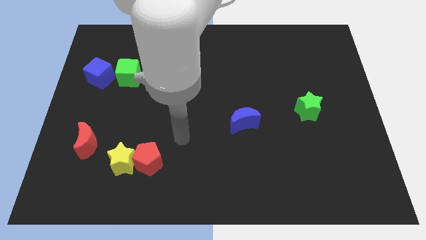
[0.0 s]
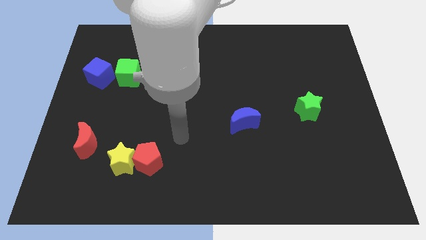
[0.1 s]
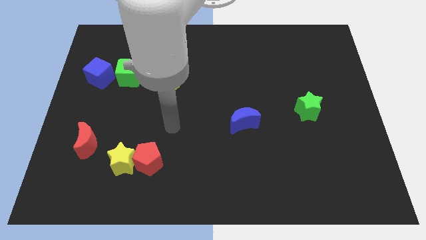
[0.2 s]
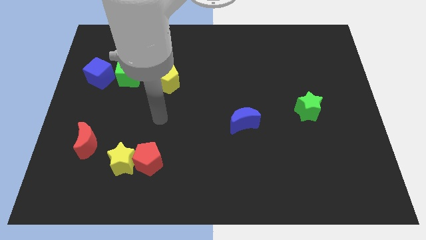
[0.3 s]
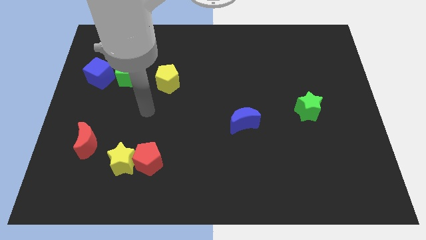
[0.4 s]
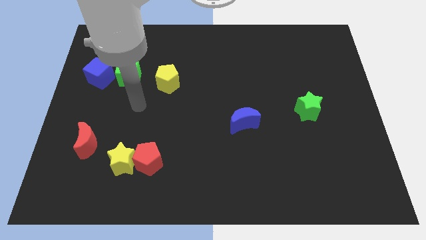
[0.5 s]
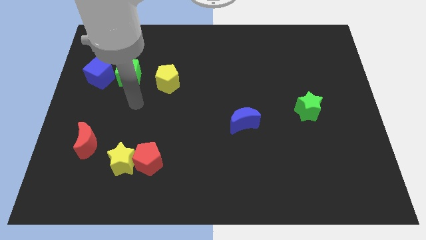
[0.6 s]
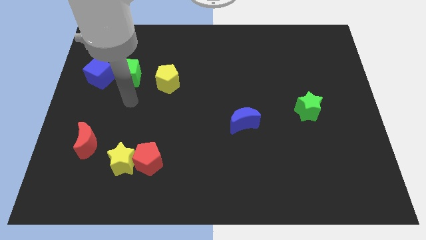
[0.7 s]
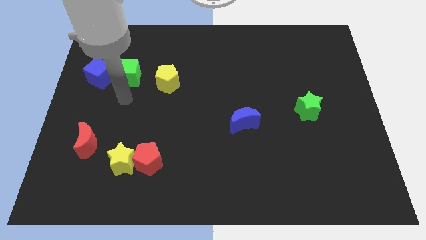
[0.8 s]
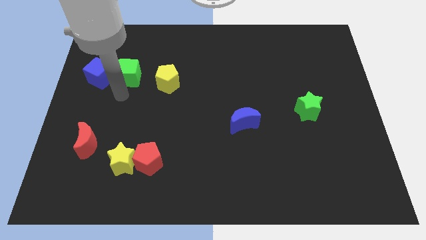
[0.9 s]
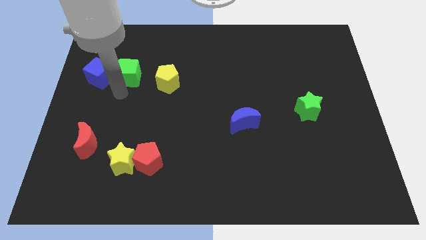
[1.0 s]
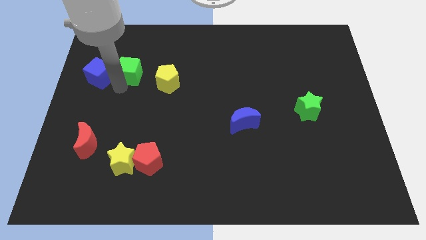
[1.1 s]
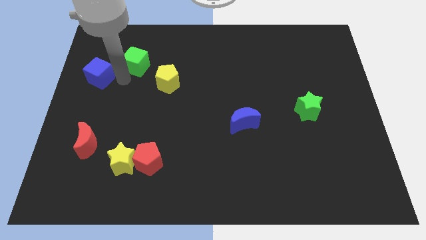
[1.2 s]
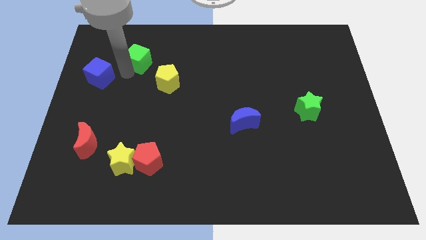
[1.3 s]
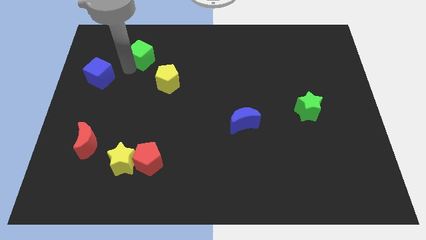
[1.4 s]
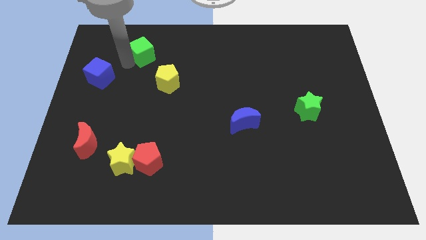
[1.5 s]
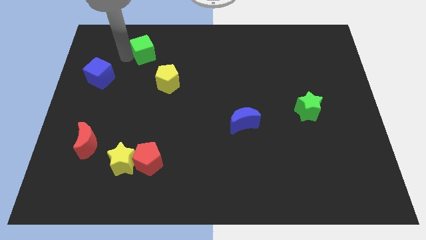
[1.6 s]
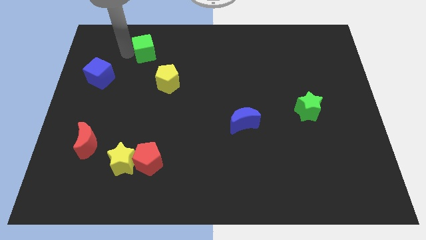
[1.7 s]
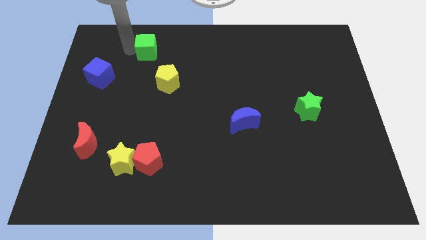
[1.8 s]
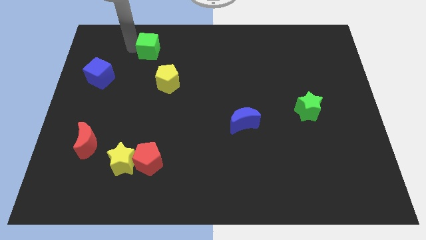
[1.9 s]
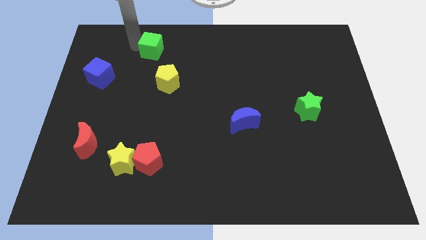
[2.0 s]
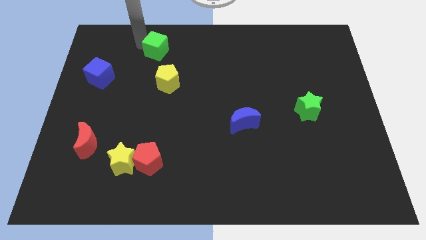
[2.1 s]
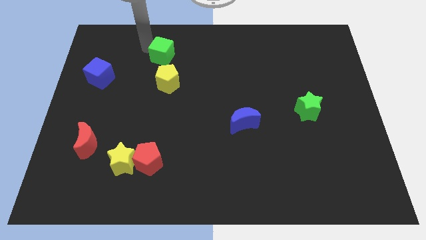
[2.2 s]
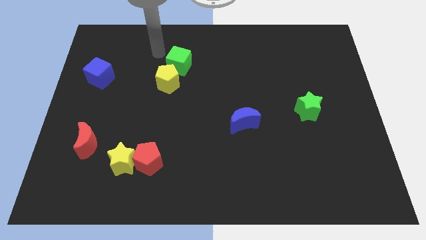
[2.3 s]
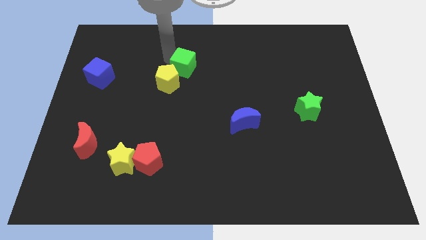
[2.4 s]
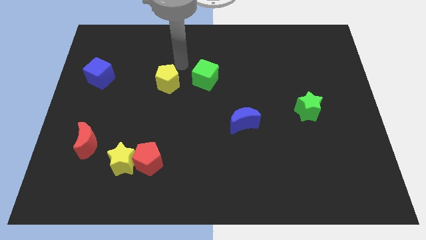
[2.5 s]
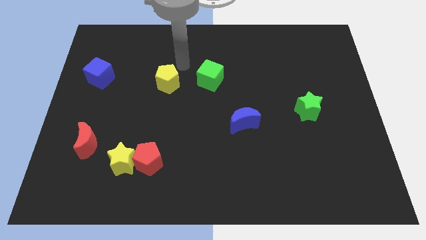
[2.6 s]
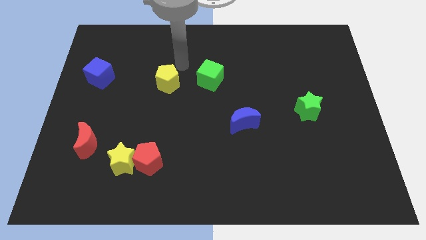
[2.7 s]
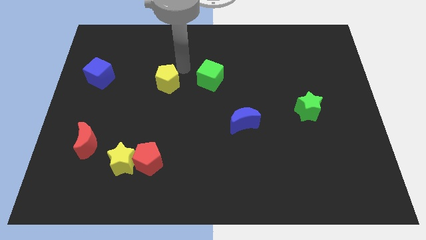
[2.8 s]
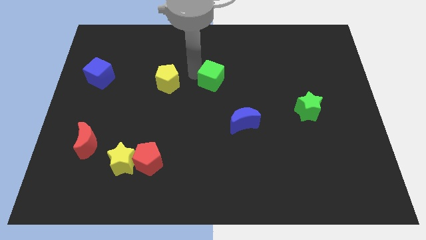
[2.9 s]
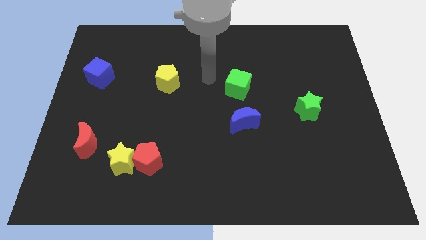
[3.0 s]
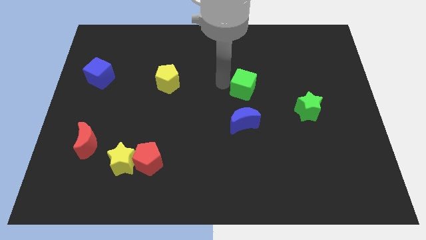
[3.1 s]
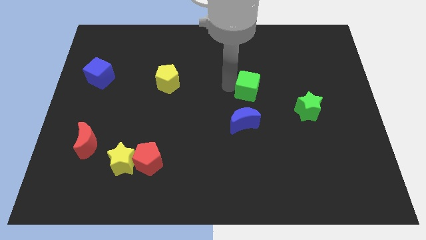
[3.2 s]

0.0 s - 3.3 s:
place the green cube above the blue crescent

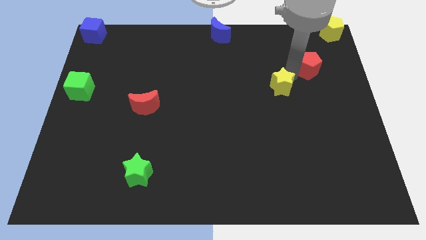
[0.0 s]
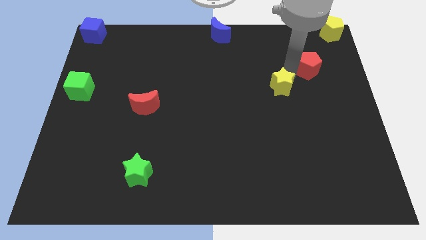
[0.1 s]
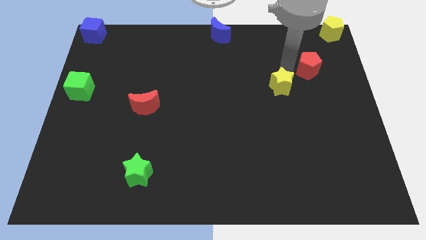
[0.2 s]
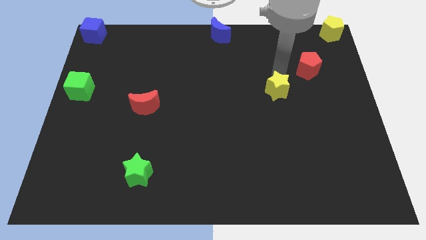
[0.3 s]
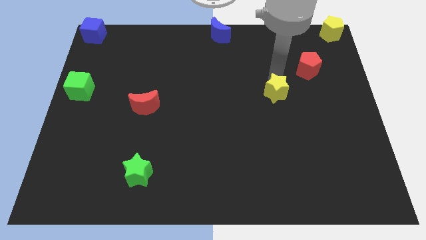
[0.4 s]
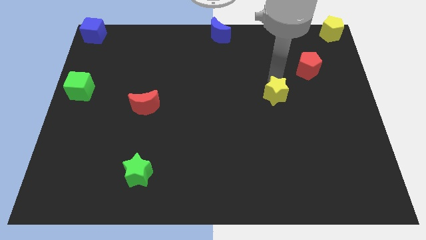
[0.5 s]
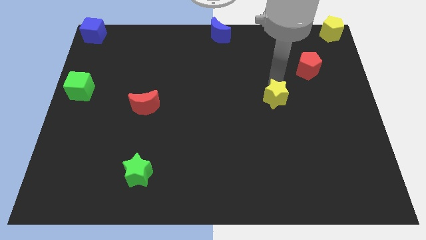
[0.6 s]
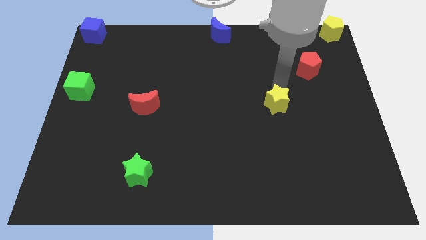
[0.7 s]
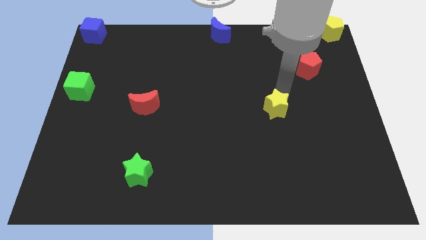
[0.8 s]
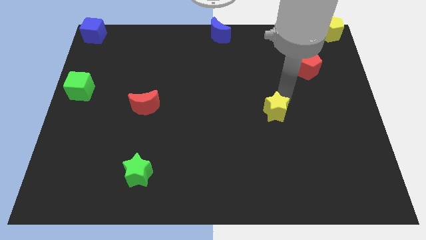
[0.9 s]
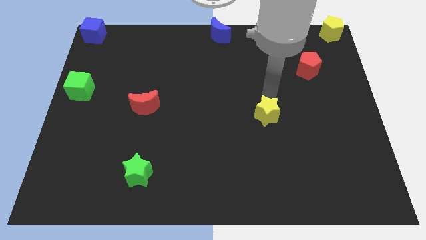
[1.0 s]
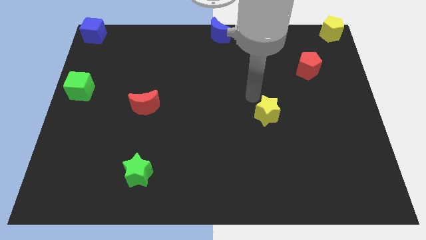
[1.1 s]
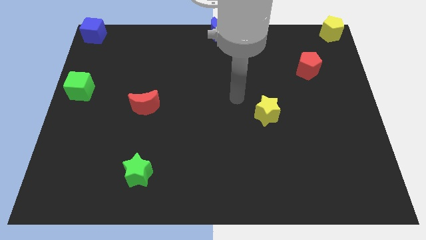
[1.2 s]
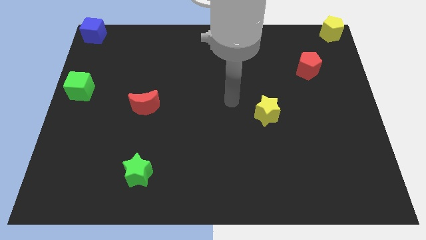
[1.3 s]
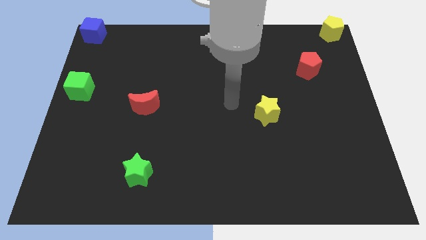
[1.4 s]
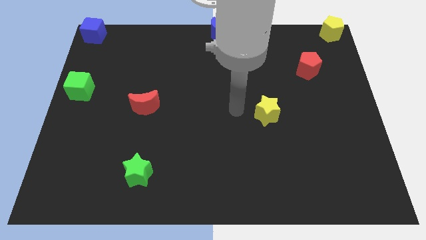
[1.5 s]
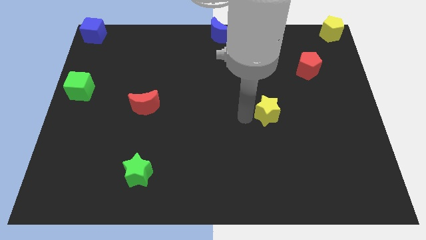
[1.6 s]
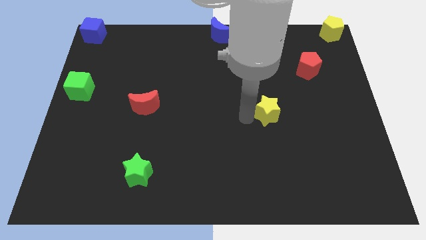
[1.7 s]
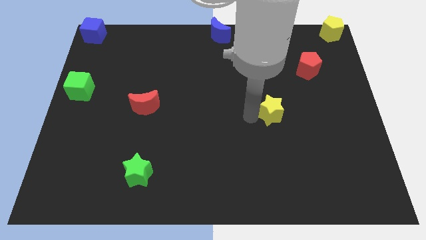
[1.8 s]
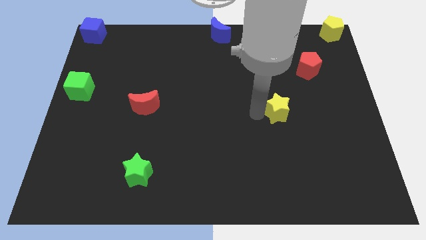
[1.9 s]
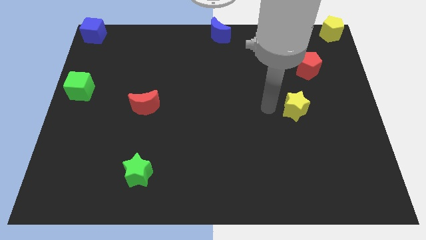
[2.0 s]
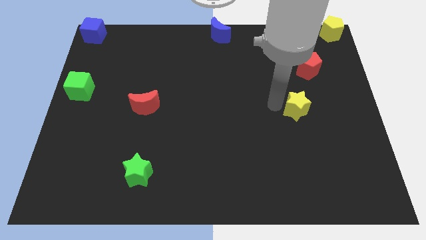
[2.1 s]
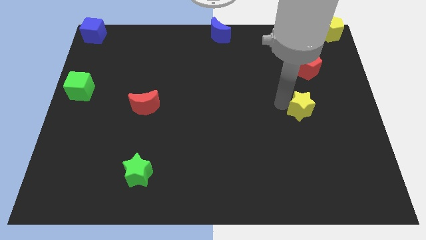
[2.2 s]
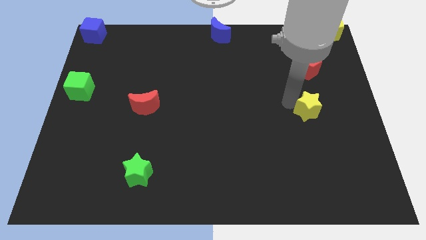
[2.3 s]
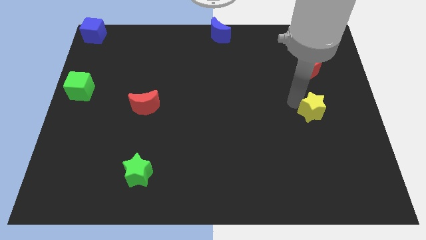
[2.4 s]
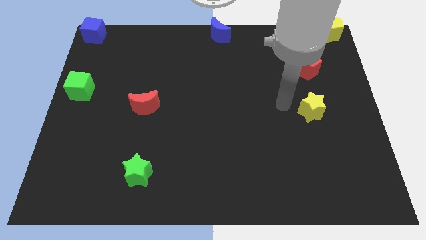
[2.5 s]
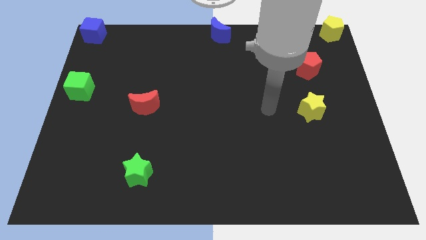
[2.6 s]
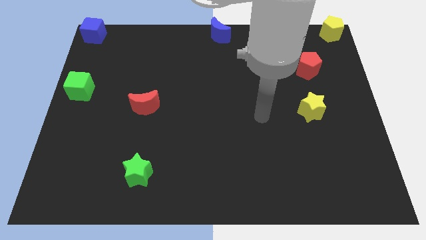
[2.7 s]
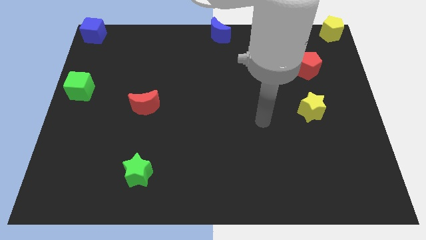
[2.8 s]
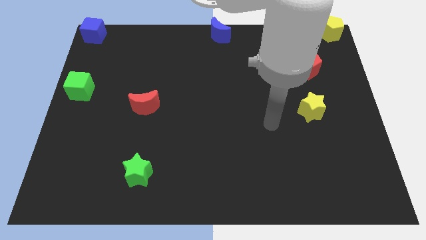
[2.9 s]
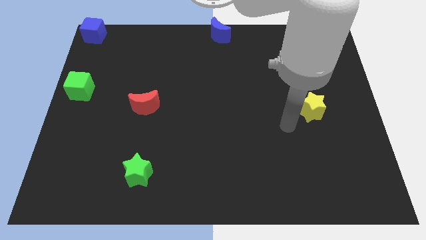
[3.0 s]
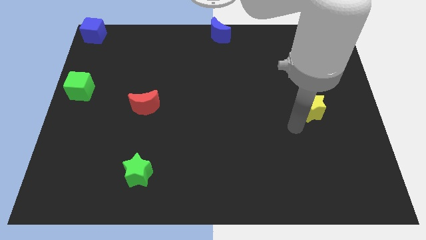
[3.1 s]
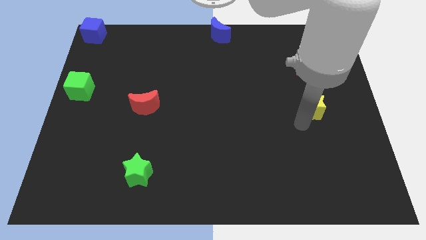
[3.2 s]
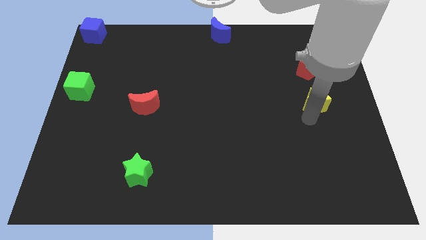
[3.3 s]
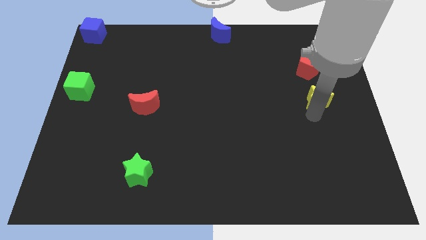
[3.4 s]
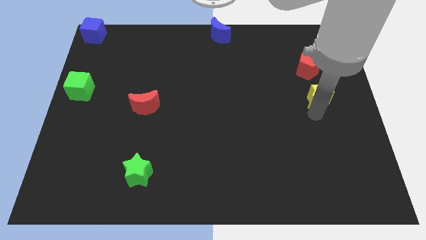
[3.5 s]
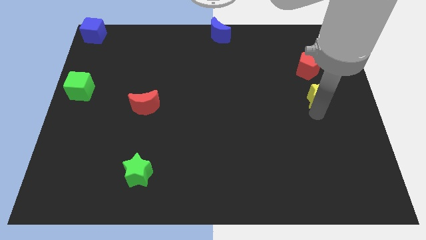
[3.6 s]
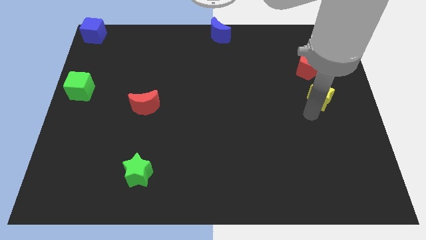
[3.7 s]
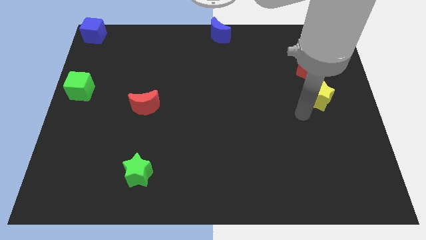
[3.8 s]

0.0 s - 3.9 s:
push the yellow star to the bottom of the red pentagon

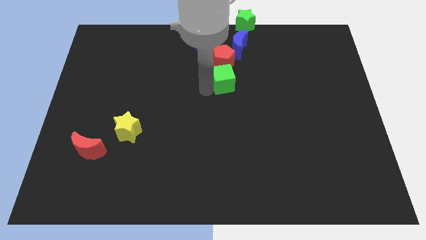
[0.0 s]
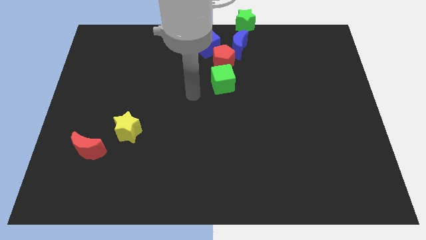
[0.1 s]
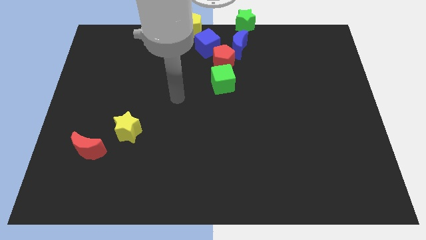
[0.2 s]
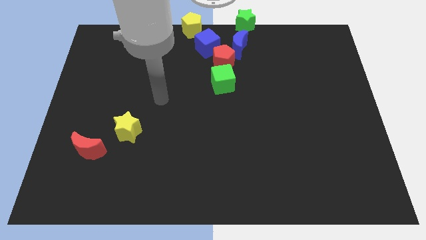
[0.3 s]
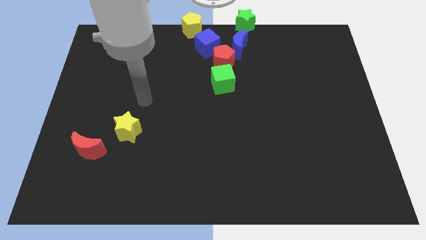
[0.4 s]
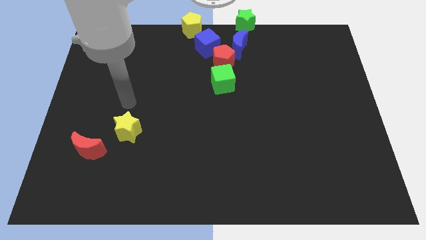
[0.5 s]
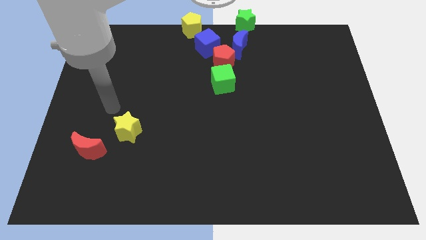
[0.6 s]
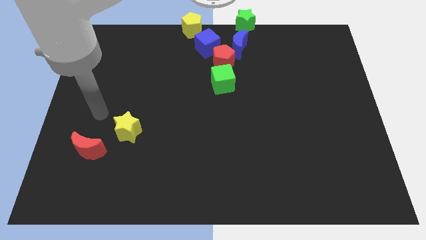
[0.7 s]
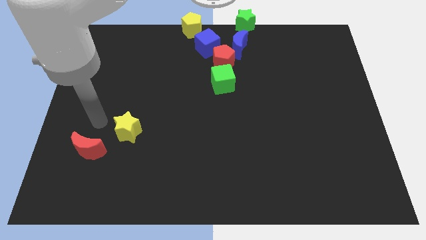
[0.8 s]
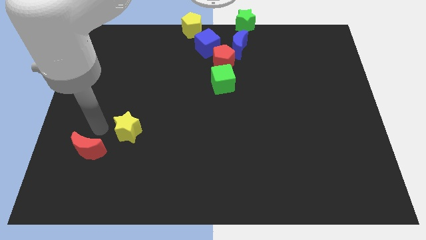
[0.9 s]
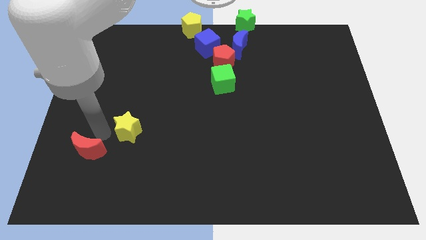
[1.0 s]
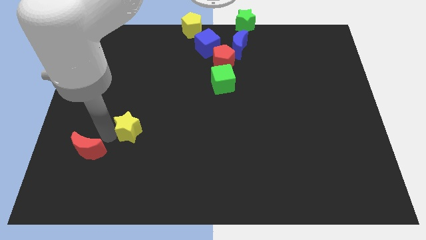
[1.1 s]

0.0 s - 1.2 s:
place the arm to the left of the yellow star

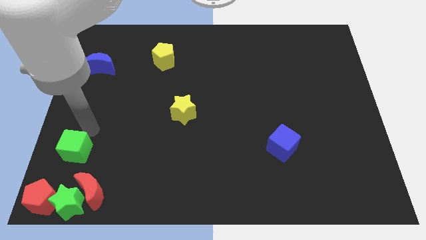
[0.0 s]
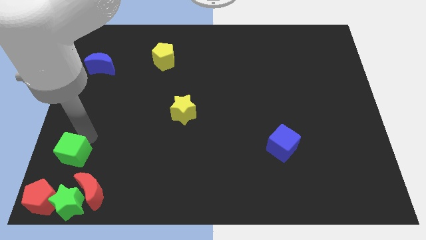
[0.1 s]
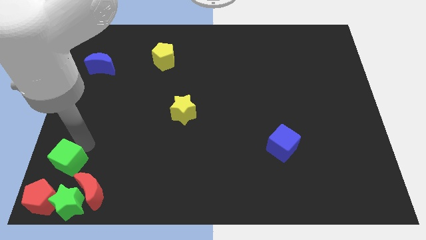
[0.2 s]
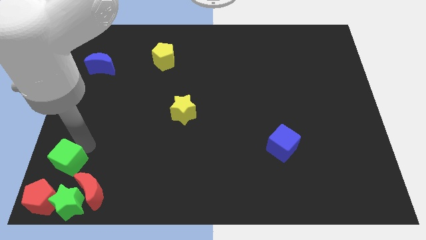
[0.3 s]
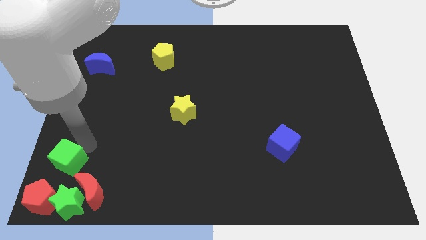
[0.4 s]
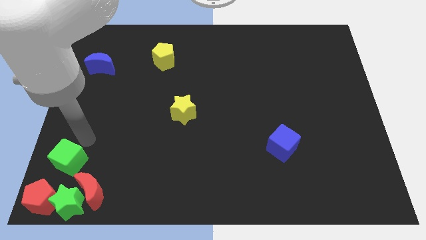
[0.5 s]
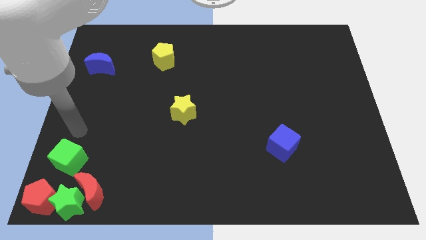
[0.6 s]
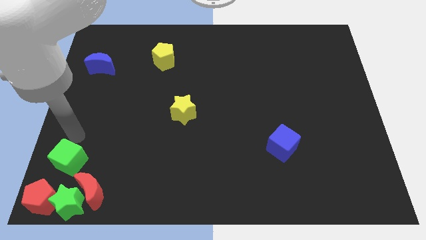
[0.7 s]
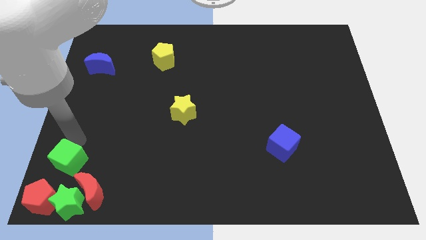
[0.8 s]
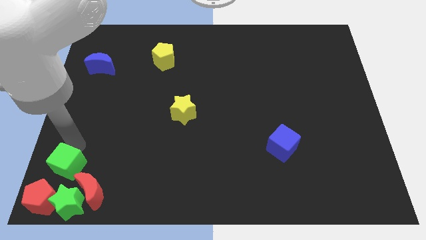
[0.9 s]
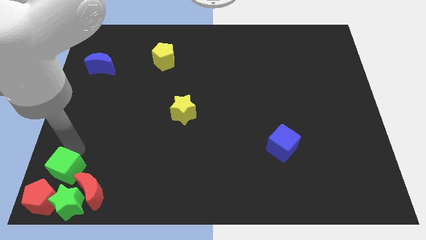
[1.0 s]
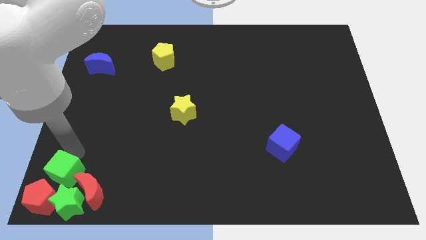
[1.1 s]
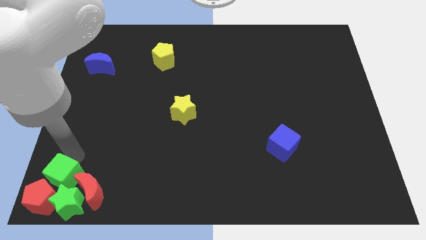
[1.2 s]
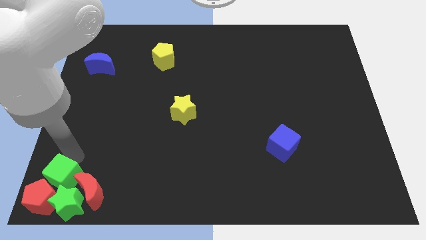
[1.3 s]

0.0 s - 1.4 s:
push the green cube into the green star to the bottom left
